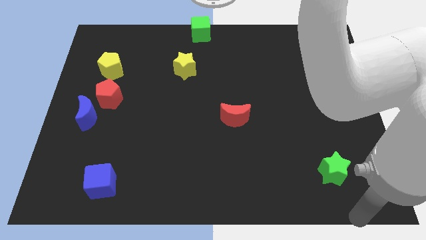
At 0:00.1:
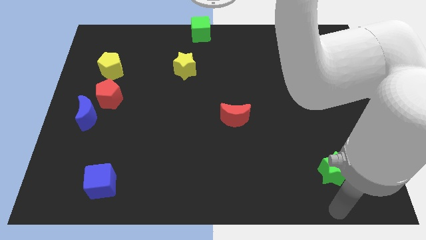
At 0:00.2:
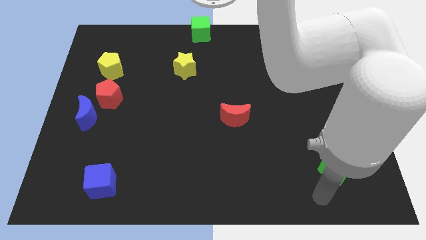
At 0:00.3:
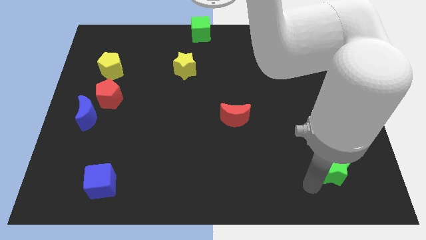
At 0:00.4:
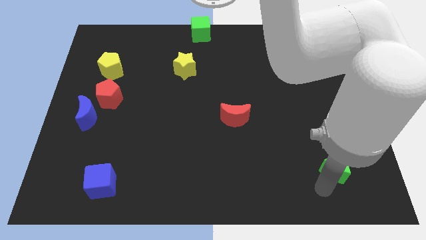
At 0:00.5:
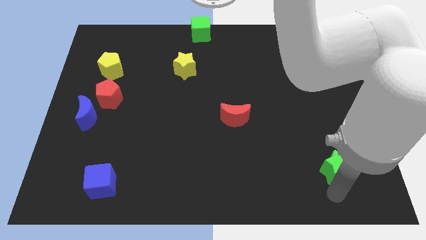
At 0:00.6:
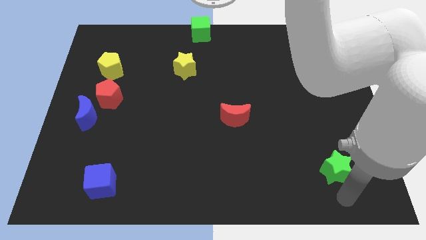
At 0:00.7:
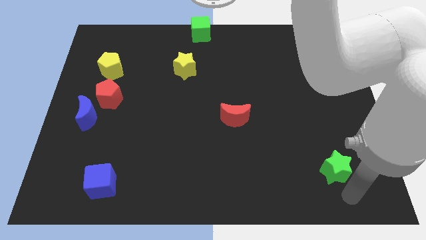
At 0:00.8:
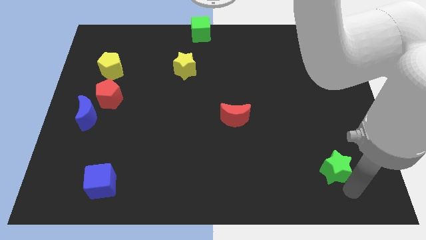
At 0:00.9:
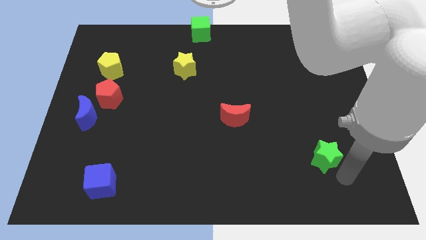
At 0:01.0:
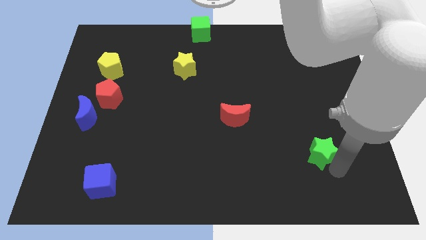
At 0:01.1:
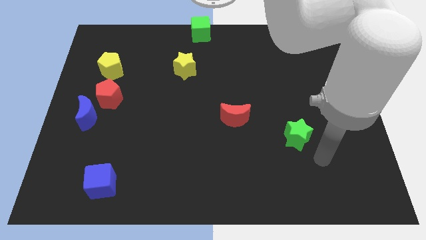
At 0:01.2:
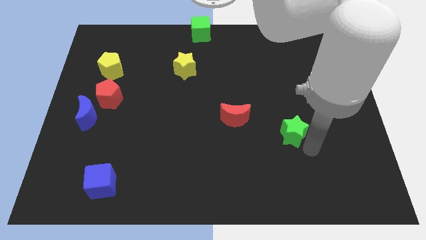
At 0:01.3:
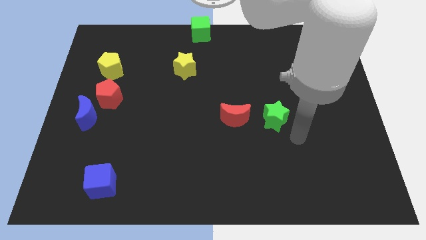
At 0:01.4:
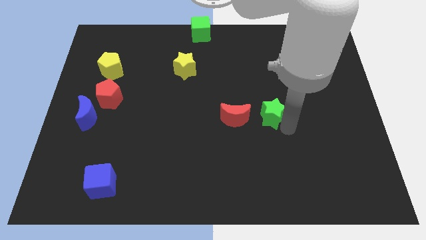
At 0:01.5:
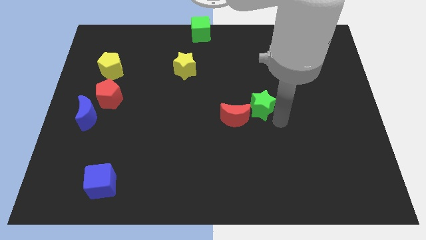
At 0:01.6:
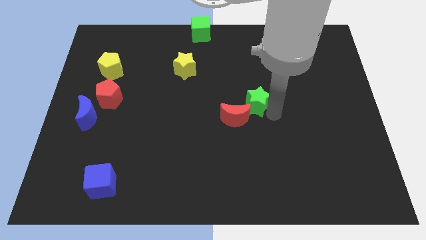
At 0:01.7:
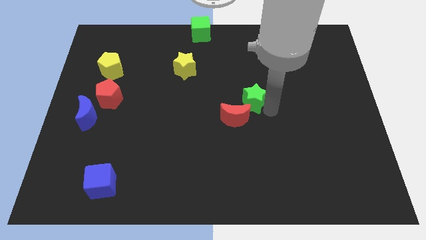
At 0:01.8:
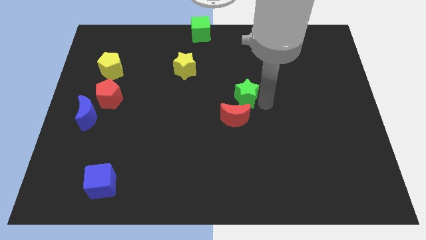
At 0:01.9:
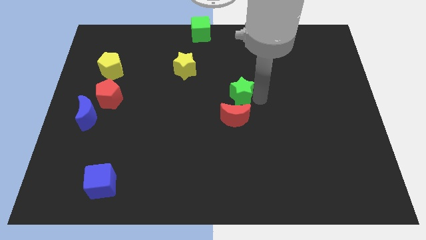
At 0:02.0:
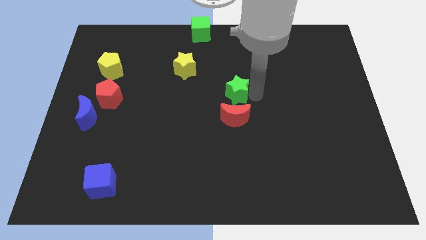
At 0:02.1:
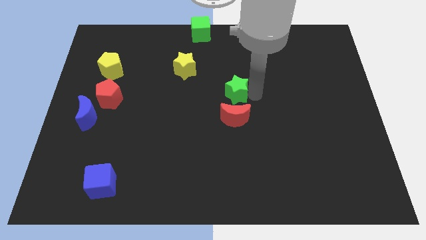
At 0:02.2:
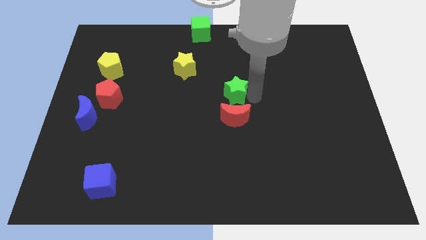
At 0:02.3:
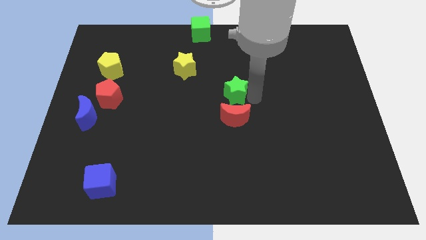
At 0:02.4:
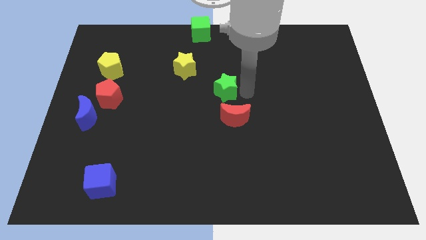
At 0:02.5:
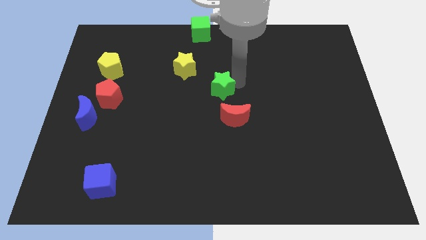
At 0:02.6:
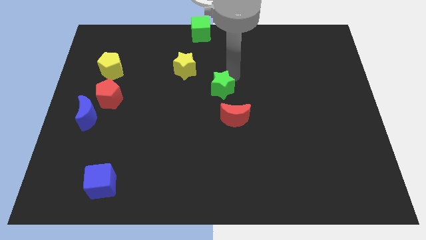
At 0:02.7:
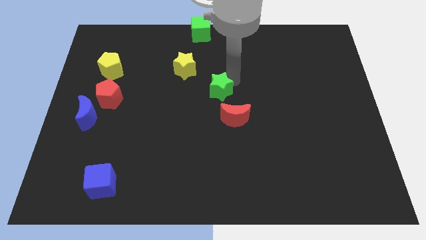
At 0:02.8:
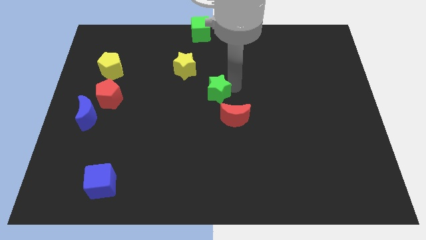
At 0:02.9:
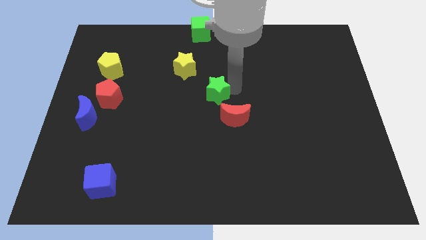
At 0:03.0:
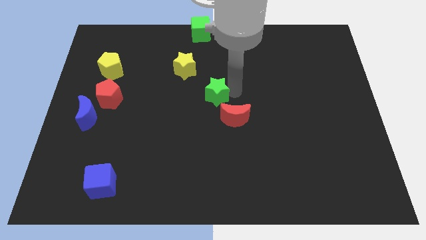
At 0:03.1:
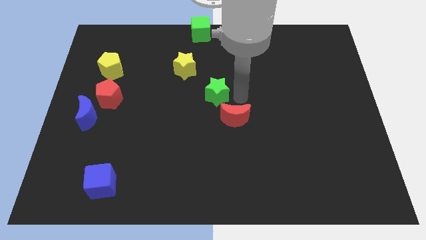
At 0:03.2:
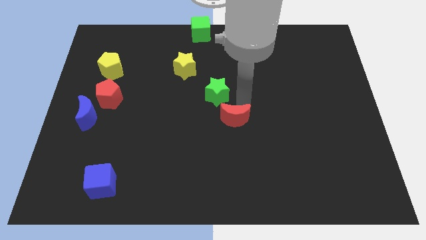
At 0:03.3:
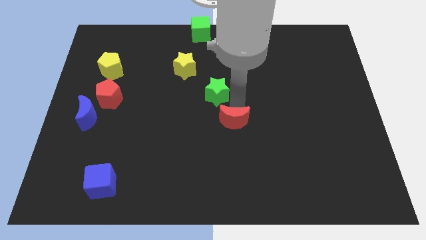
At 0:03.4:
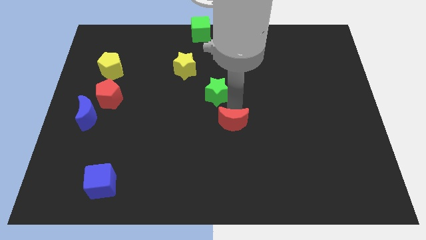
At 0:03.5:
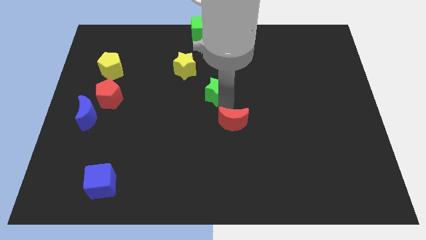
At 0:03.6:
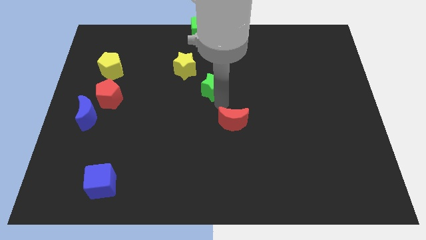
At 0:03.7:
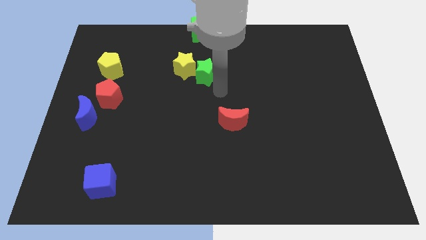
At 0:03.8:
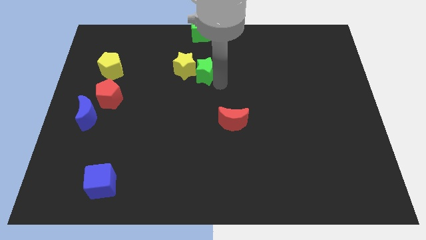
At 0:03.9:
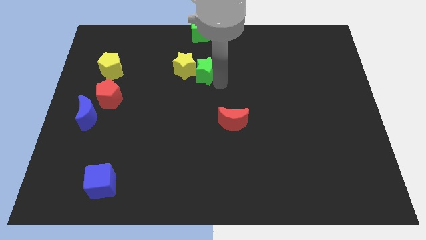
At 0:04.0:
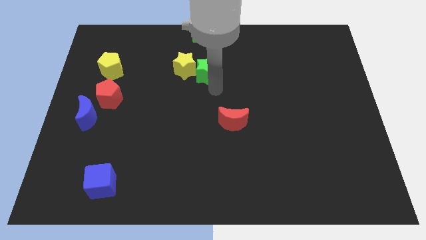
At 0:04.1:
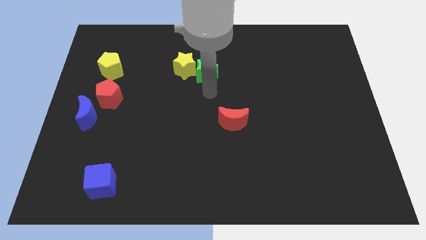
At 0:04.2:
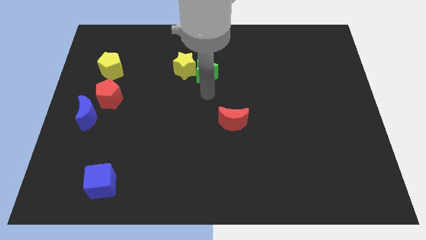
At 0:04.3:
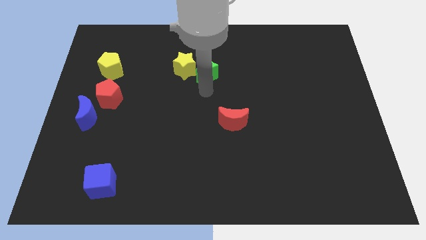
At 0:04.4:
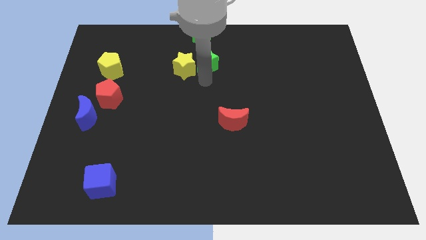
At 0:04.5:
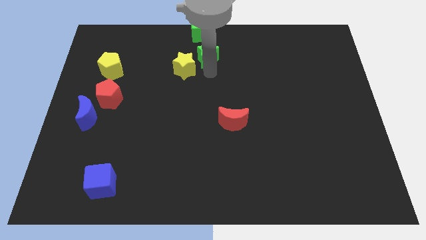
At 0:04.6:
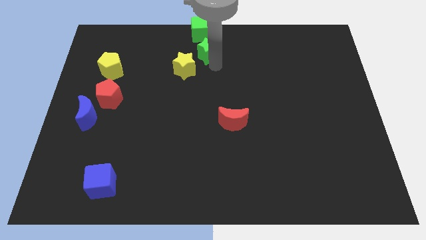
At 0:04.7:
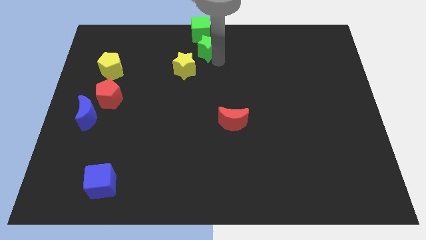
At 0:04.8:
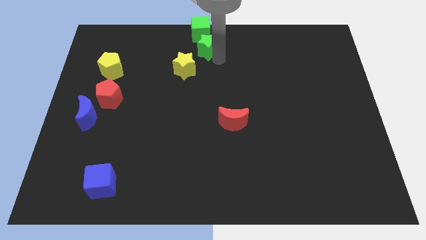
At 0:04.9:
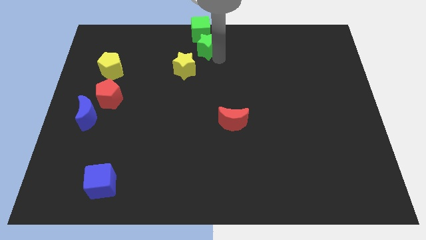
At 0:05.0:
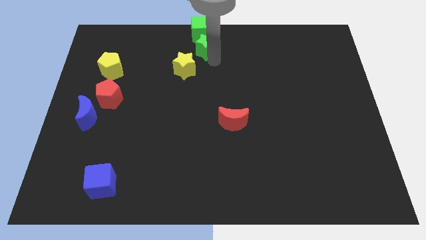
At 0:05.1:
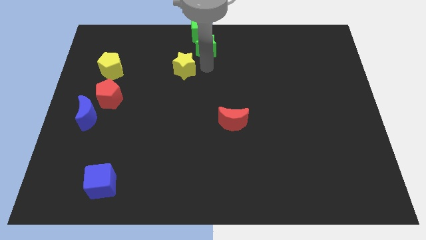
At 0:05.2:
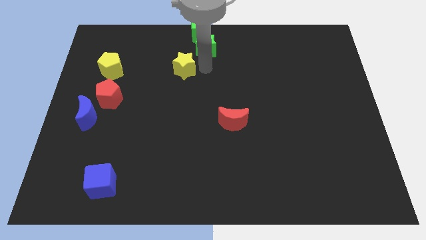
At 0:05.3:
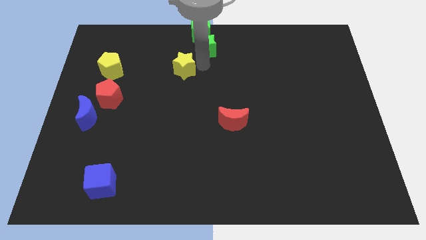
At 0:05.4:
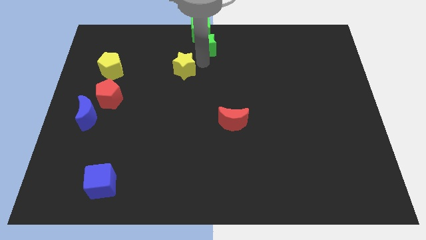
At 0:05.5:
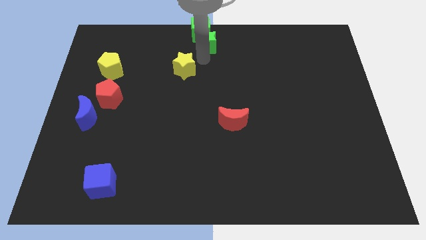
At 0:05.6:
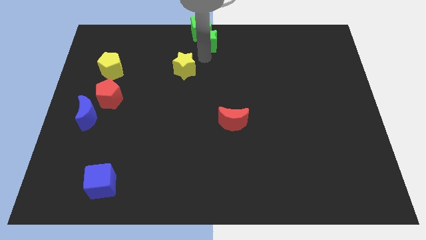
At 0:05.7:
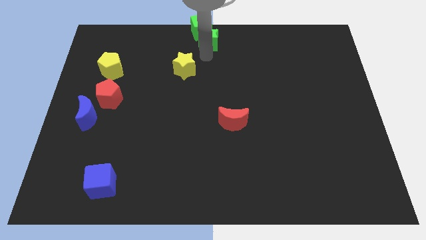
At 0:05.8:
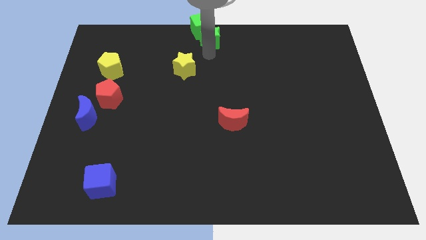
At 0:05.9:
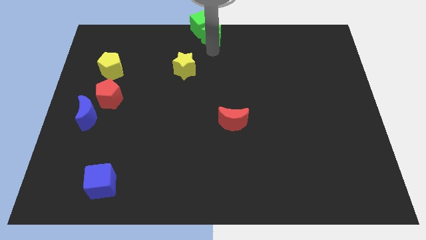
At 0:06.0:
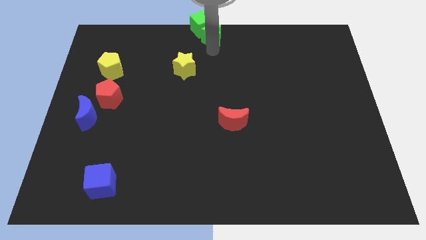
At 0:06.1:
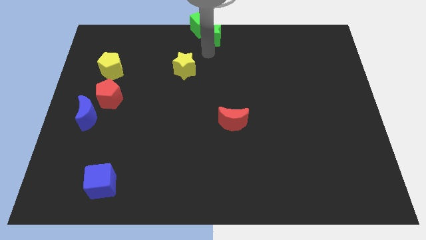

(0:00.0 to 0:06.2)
push the green star towards the top center of the board

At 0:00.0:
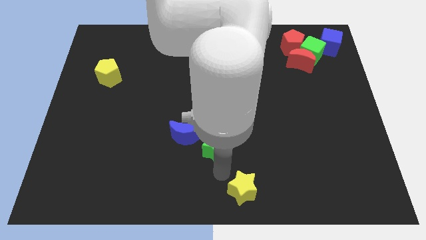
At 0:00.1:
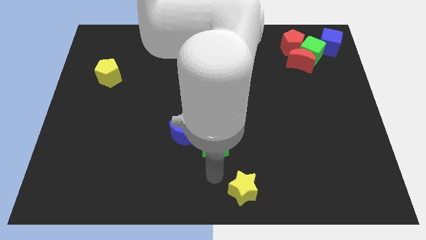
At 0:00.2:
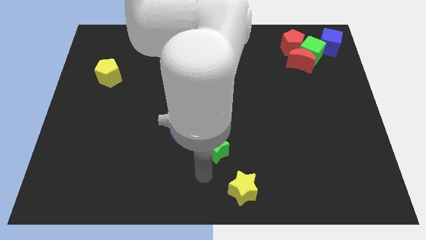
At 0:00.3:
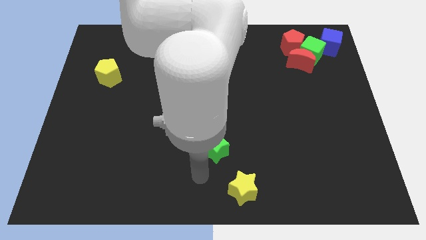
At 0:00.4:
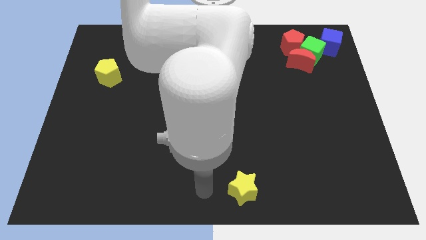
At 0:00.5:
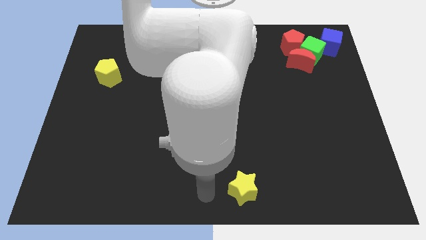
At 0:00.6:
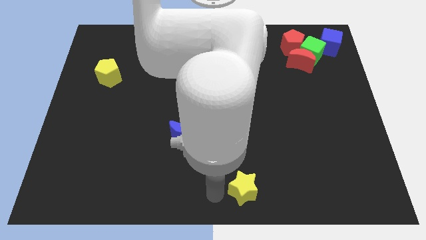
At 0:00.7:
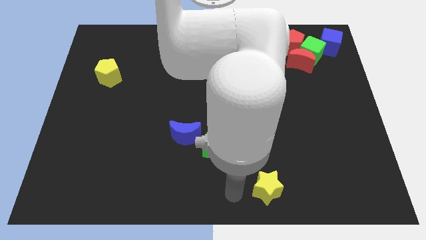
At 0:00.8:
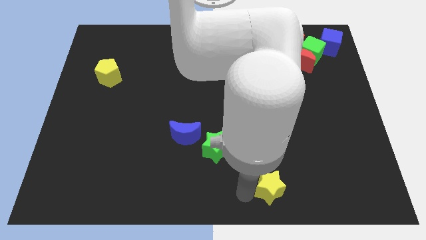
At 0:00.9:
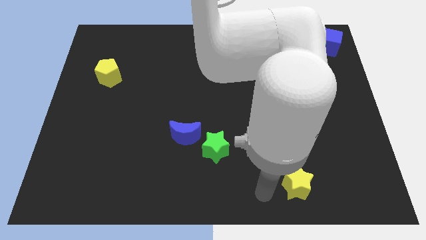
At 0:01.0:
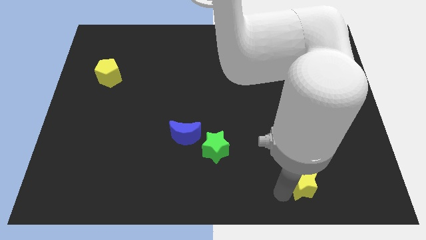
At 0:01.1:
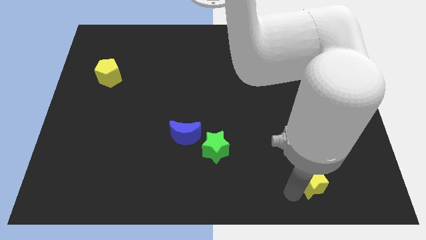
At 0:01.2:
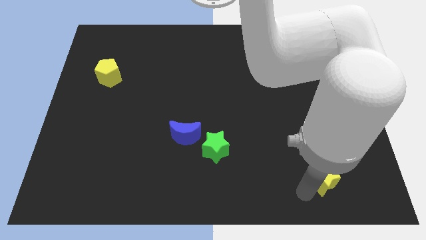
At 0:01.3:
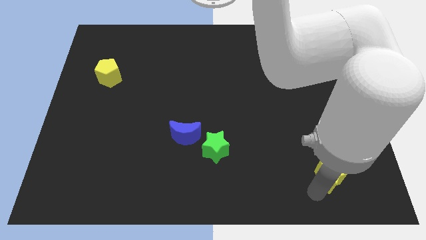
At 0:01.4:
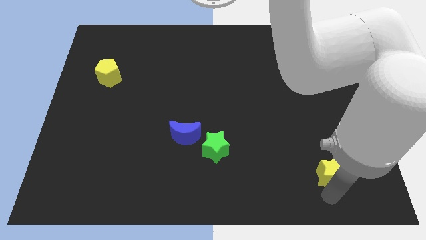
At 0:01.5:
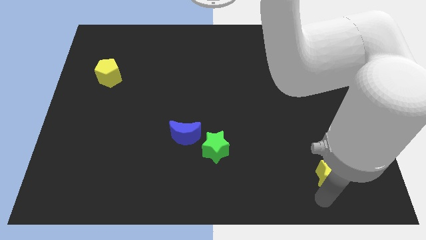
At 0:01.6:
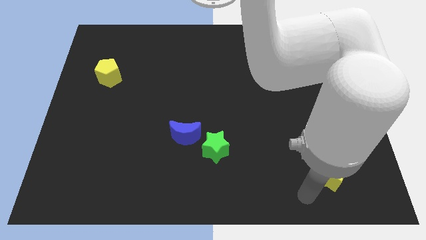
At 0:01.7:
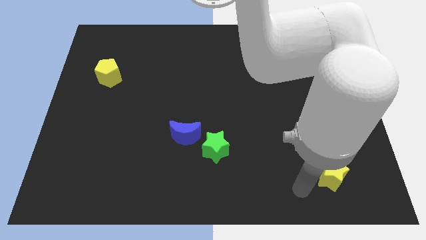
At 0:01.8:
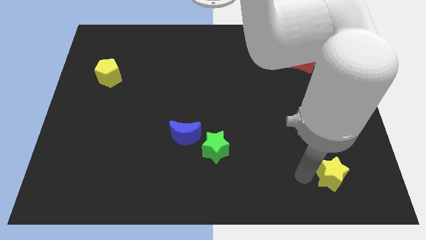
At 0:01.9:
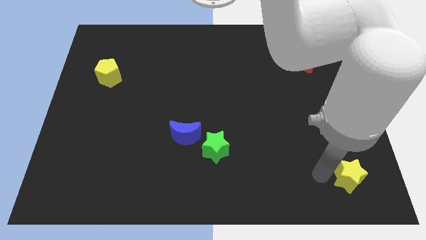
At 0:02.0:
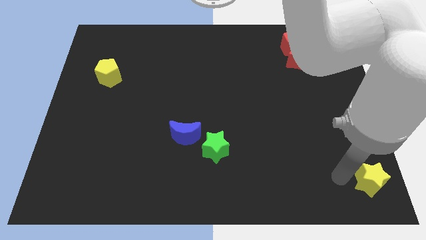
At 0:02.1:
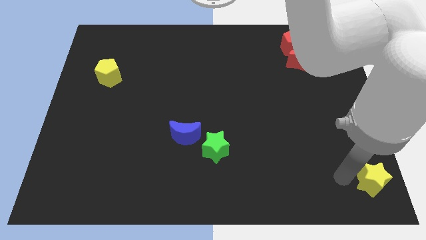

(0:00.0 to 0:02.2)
place the yellow star vertically at the bottom side of the blue cube

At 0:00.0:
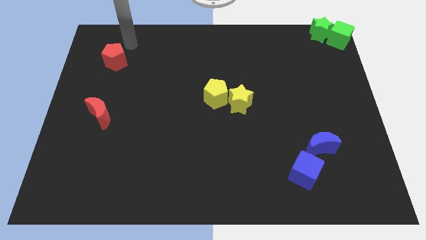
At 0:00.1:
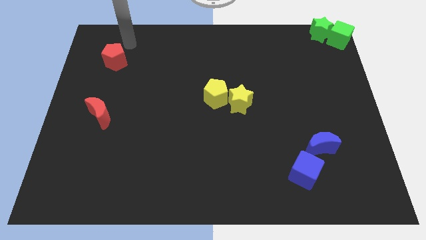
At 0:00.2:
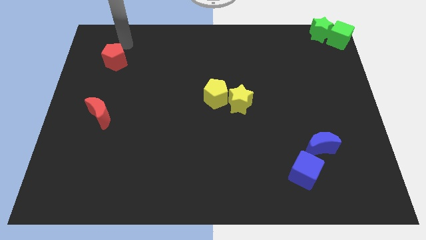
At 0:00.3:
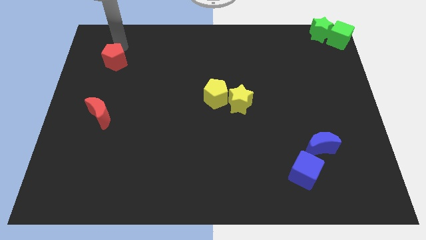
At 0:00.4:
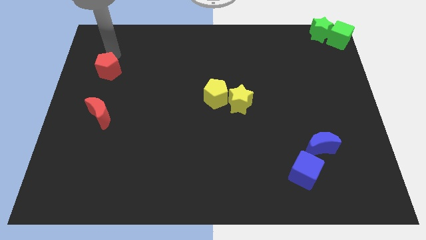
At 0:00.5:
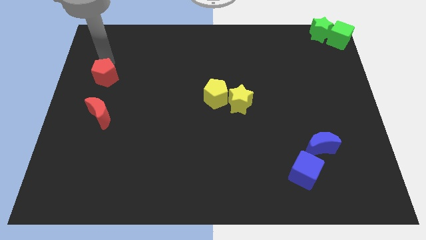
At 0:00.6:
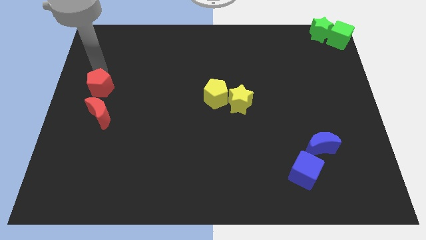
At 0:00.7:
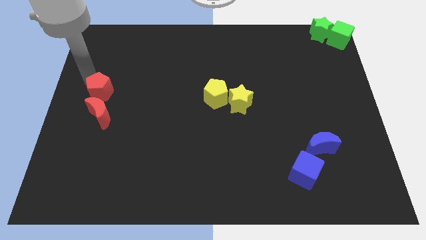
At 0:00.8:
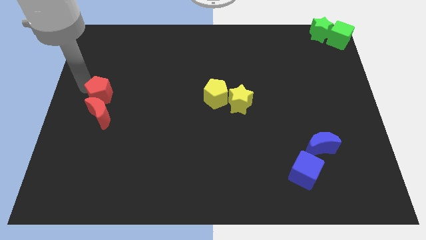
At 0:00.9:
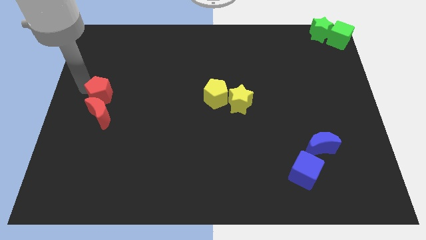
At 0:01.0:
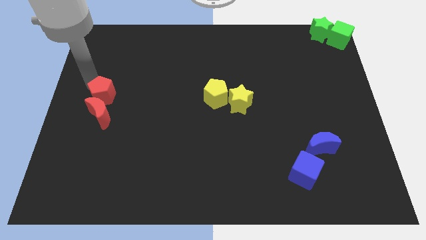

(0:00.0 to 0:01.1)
push the red pentagon above to the red moon
